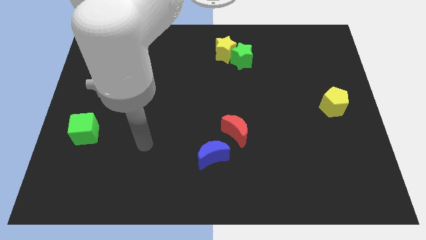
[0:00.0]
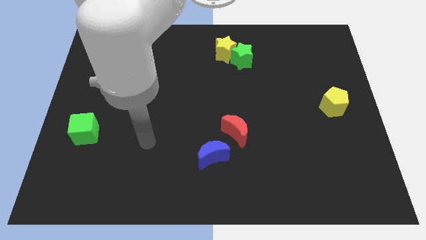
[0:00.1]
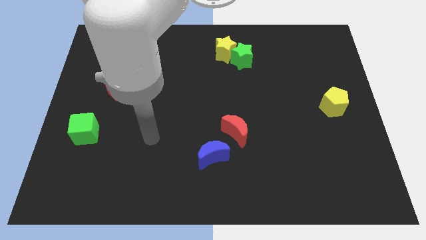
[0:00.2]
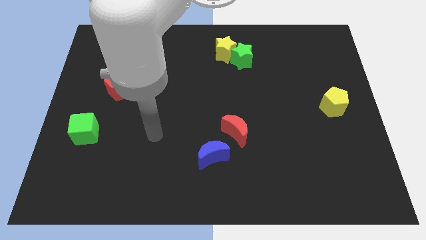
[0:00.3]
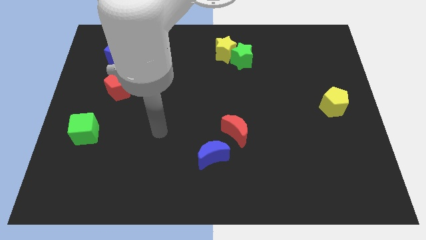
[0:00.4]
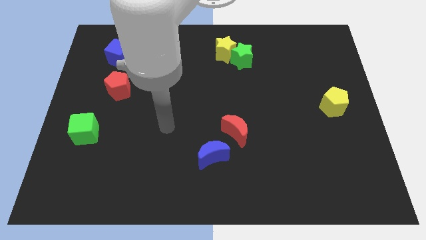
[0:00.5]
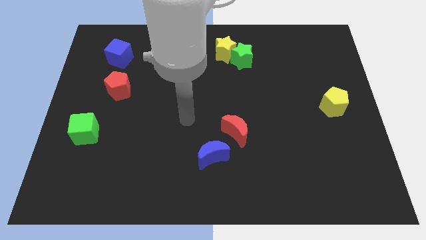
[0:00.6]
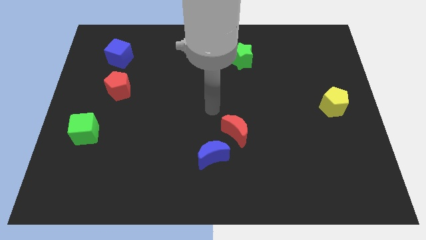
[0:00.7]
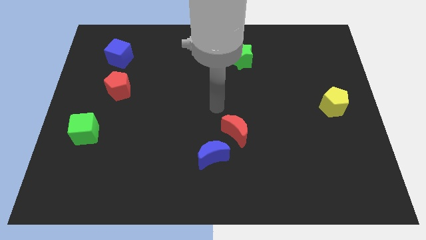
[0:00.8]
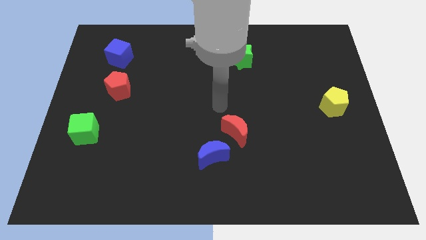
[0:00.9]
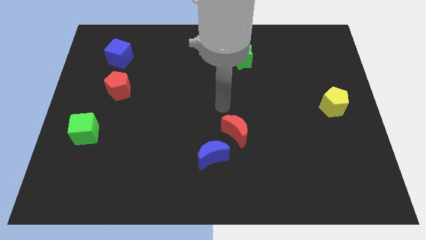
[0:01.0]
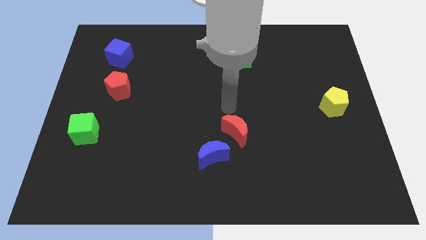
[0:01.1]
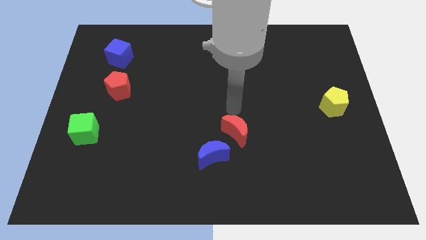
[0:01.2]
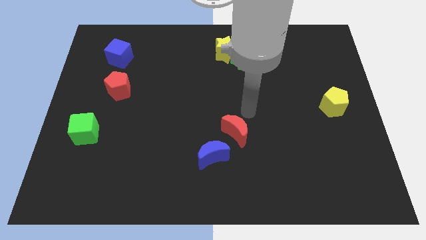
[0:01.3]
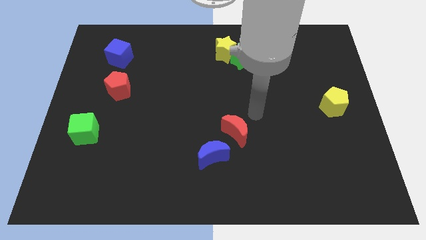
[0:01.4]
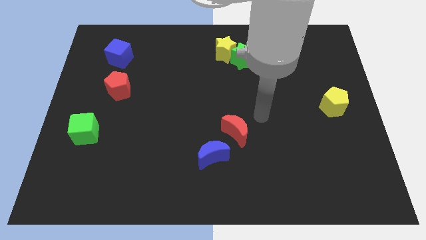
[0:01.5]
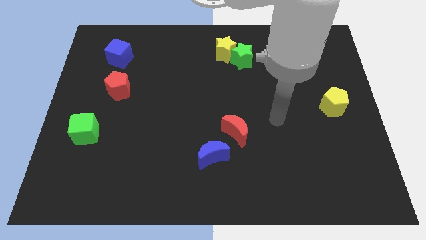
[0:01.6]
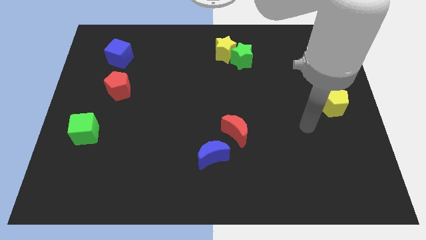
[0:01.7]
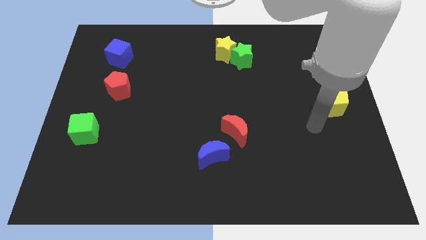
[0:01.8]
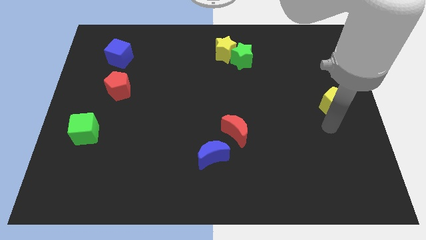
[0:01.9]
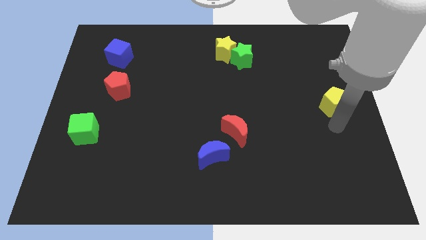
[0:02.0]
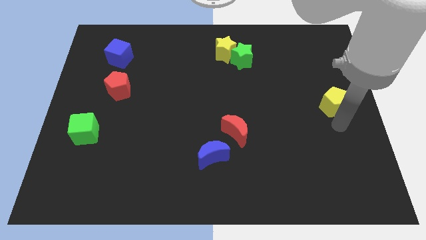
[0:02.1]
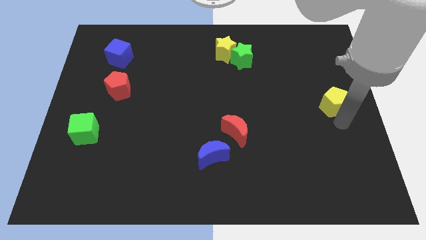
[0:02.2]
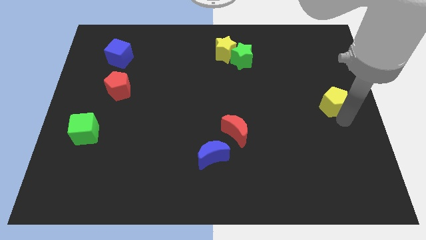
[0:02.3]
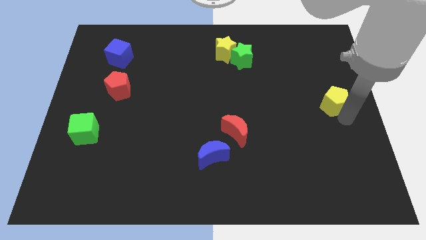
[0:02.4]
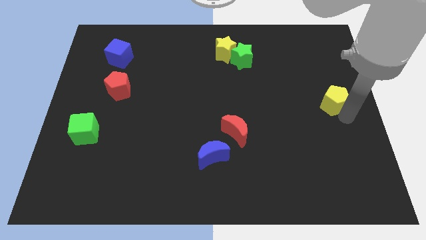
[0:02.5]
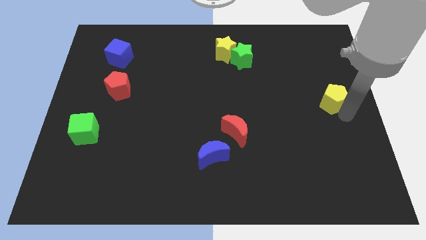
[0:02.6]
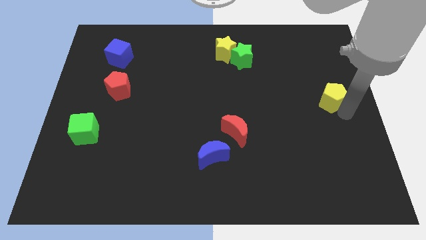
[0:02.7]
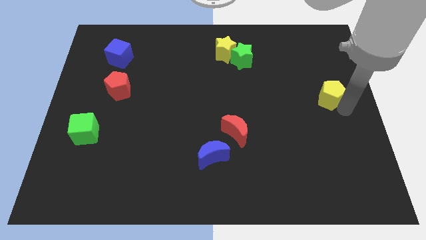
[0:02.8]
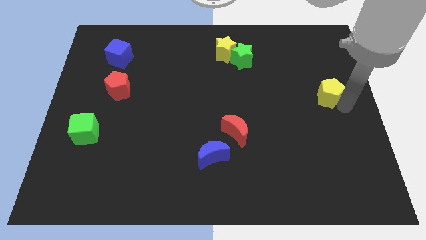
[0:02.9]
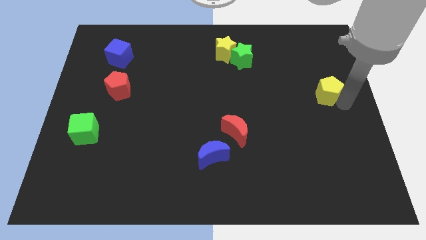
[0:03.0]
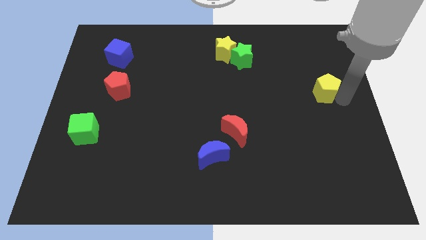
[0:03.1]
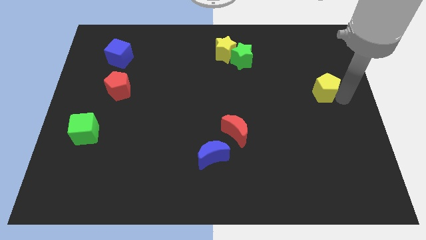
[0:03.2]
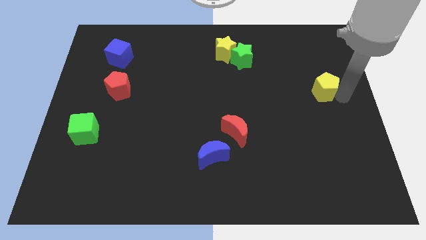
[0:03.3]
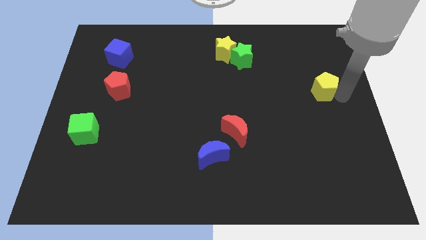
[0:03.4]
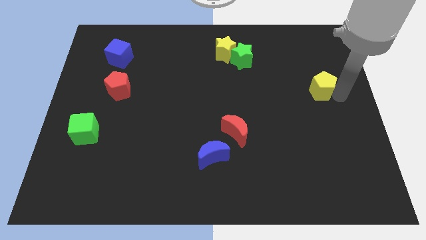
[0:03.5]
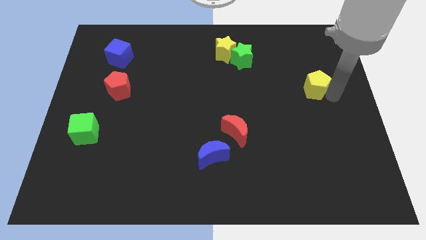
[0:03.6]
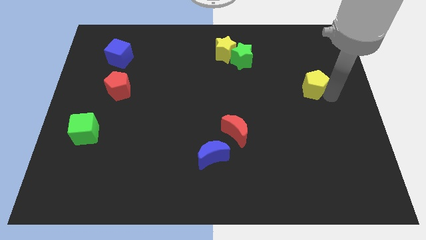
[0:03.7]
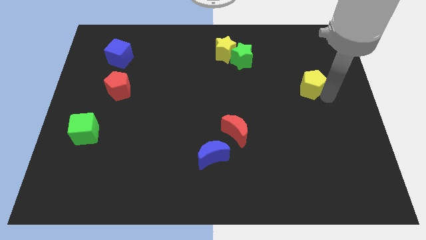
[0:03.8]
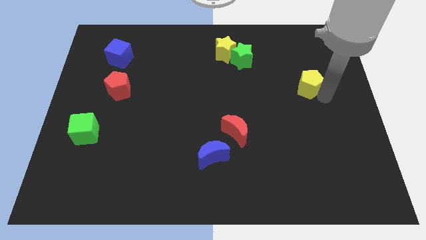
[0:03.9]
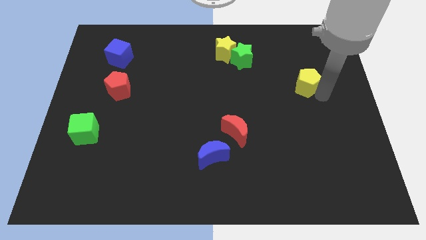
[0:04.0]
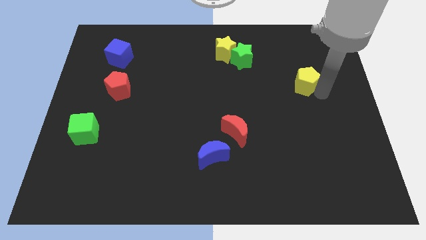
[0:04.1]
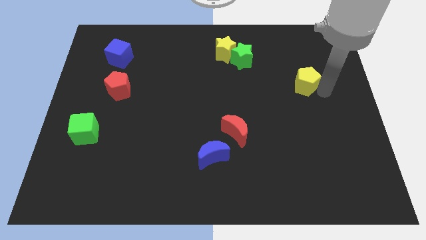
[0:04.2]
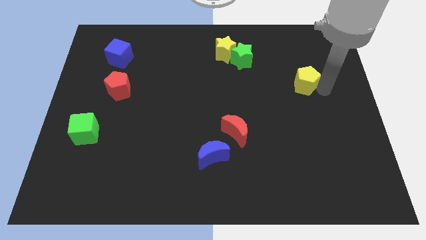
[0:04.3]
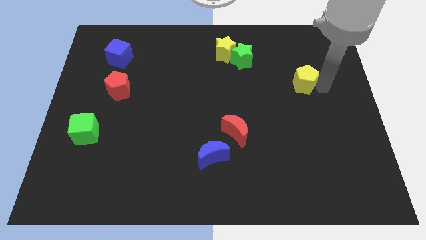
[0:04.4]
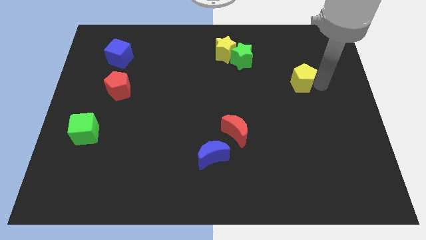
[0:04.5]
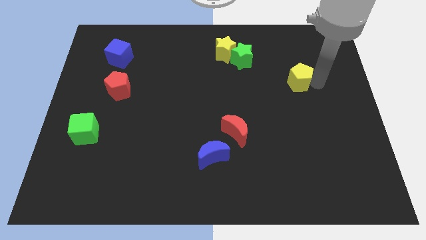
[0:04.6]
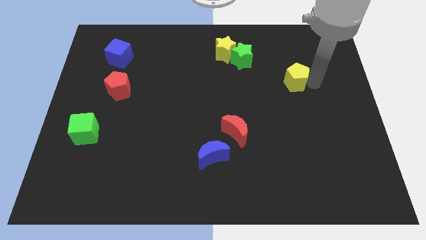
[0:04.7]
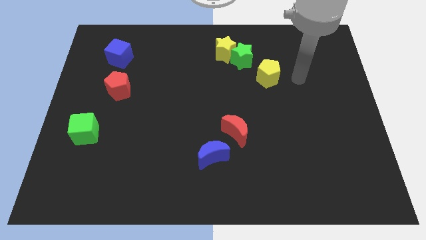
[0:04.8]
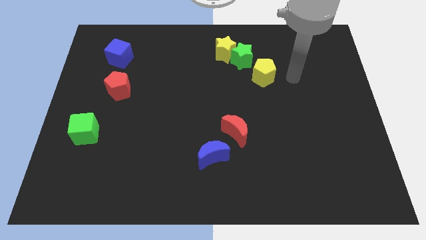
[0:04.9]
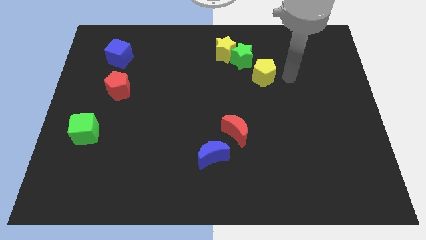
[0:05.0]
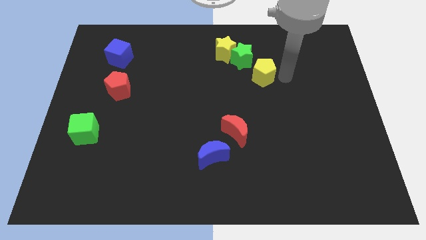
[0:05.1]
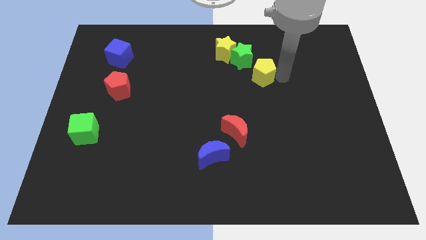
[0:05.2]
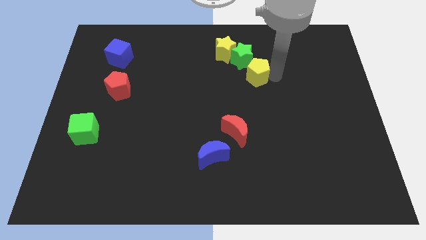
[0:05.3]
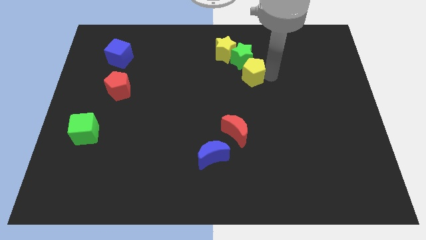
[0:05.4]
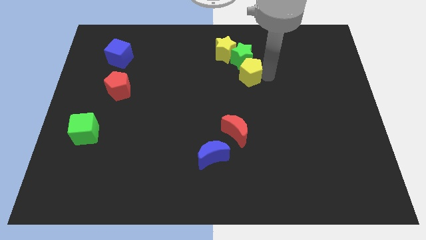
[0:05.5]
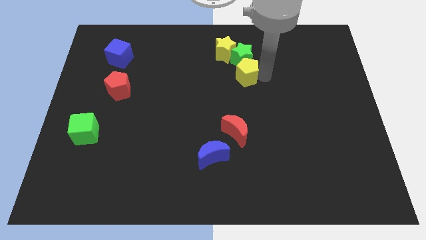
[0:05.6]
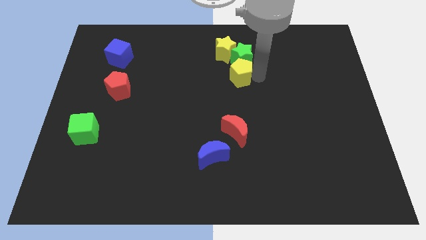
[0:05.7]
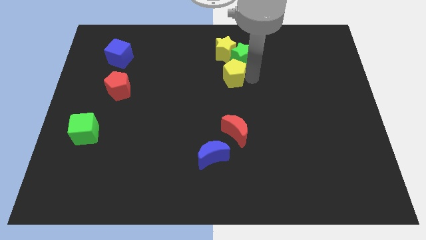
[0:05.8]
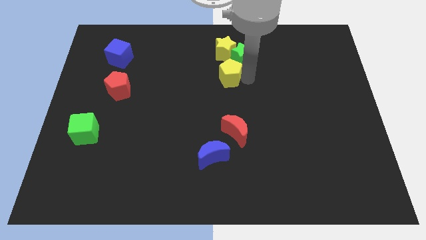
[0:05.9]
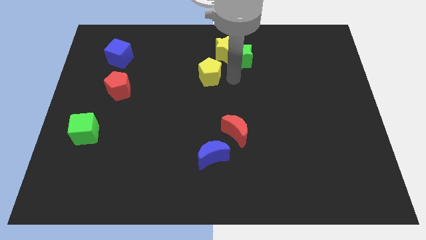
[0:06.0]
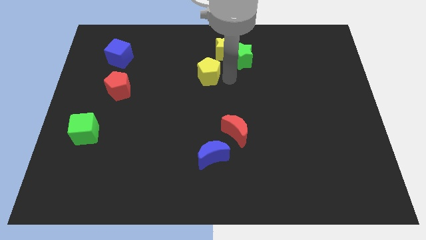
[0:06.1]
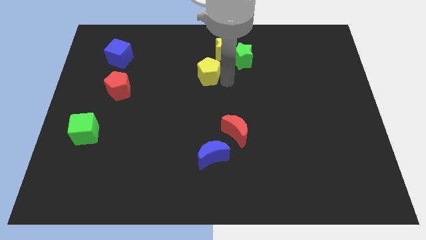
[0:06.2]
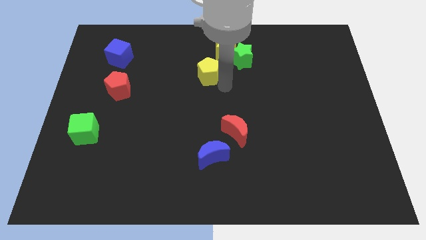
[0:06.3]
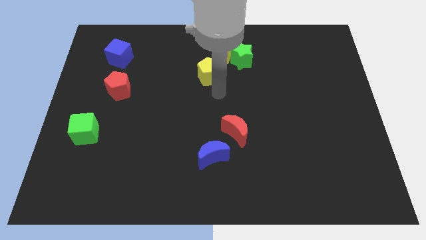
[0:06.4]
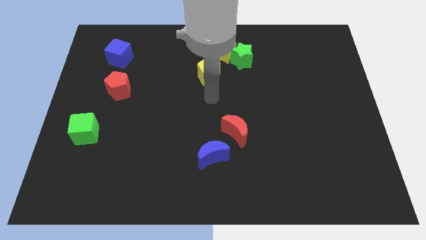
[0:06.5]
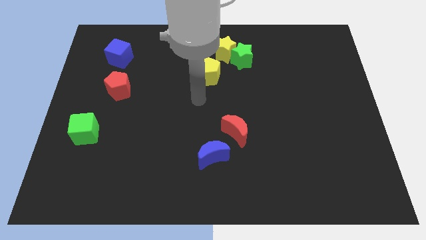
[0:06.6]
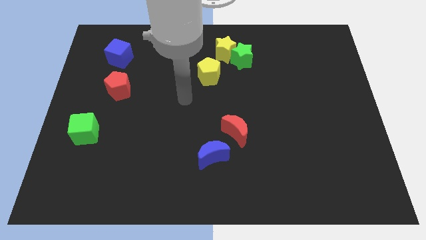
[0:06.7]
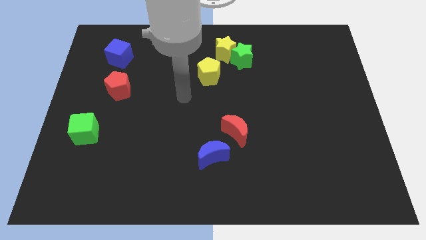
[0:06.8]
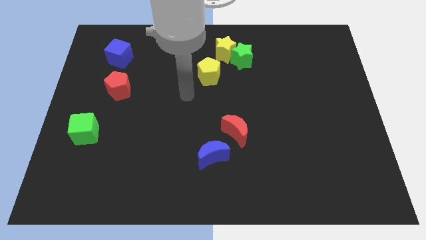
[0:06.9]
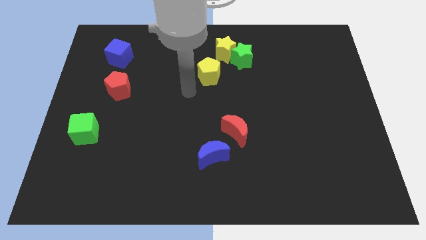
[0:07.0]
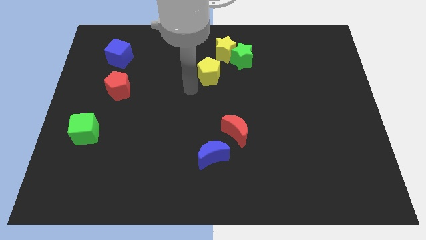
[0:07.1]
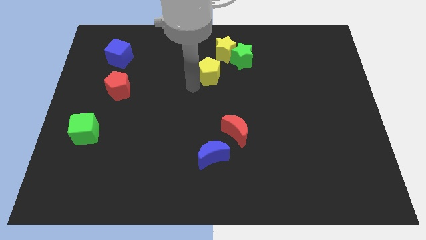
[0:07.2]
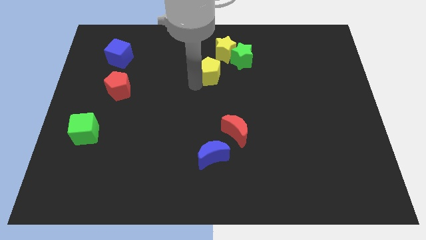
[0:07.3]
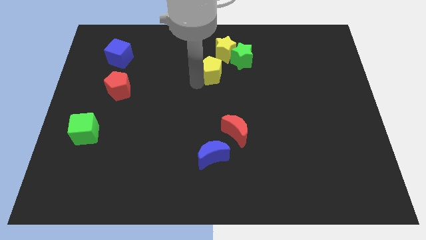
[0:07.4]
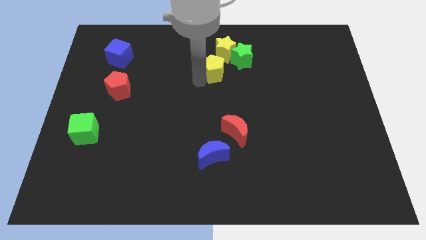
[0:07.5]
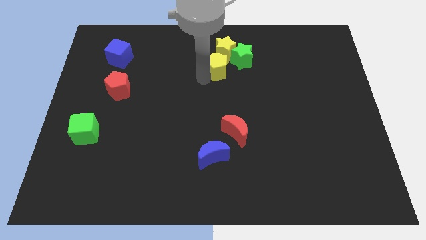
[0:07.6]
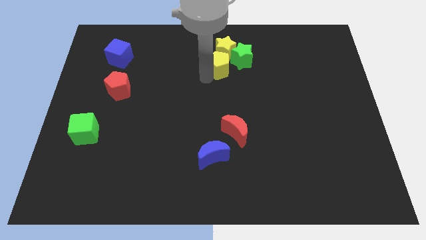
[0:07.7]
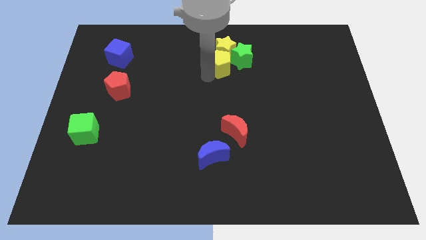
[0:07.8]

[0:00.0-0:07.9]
put the yellow pentagon towards the yellow star

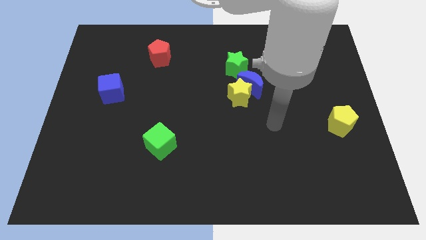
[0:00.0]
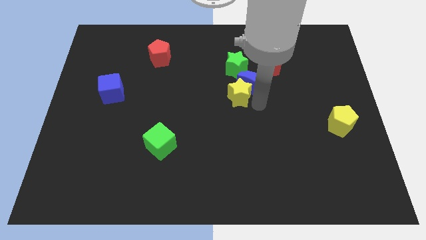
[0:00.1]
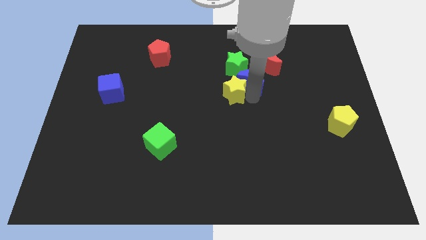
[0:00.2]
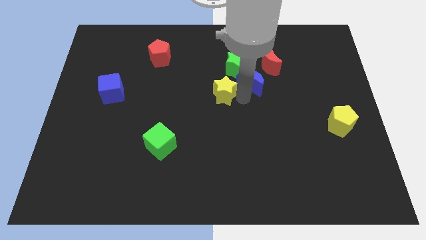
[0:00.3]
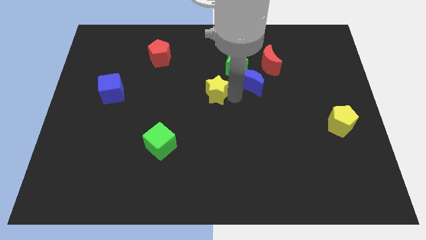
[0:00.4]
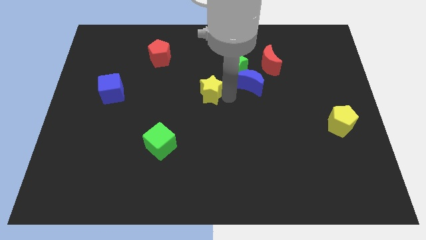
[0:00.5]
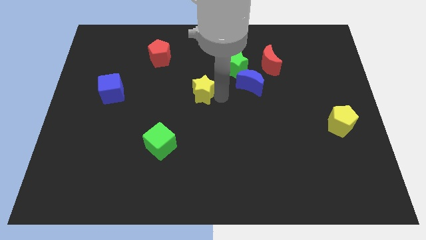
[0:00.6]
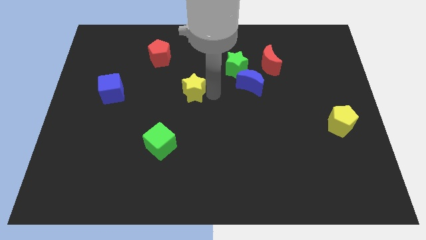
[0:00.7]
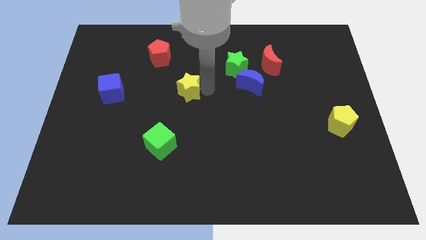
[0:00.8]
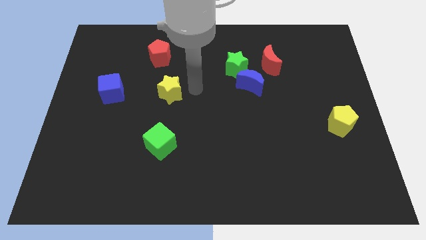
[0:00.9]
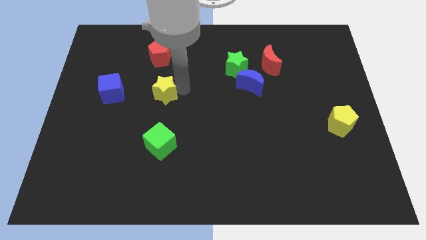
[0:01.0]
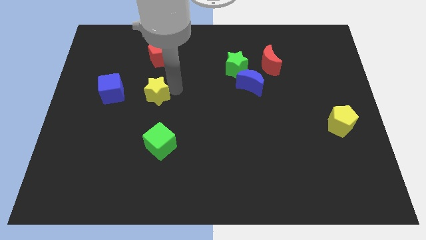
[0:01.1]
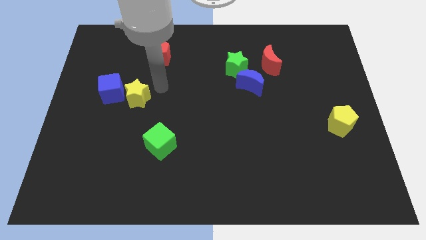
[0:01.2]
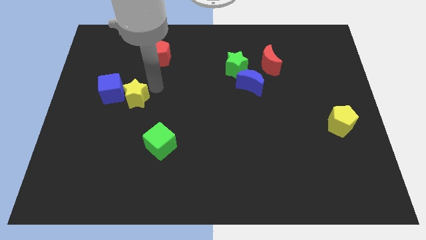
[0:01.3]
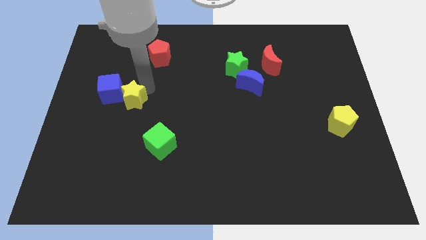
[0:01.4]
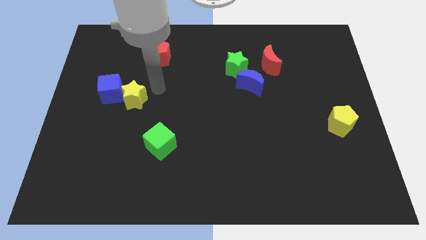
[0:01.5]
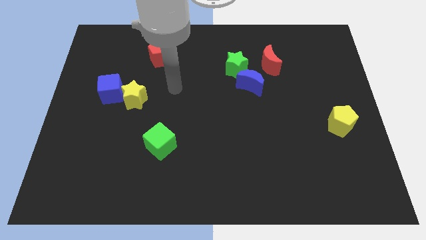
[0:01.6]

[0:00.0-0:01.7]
put the yellow star next to the blue cube
